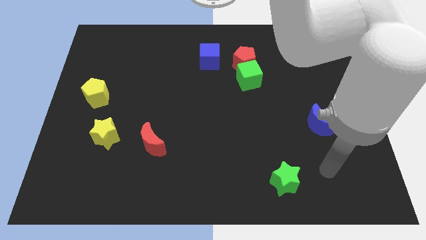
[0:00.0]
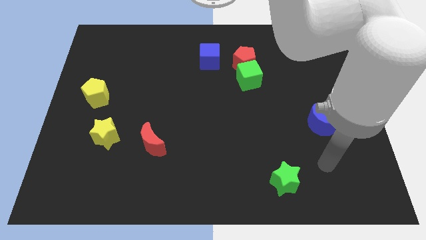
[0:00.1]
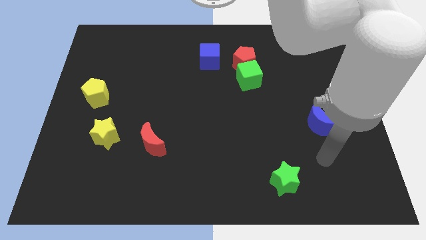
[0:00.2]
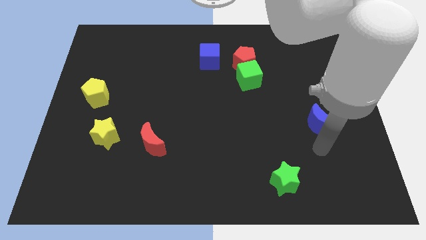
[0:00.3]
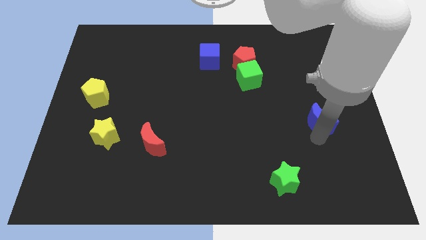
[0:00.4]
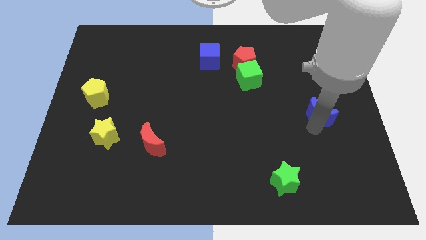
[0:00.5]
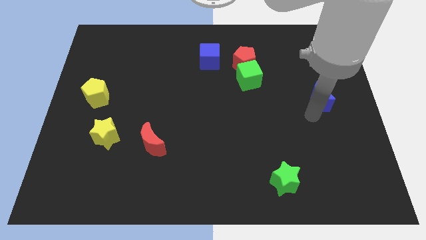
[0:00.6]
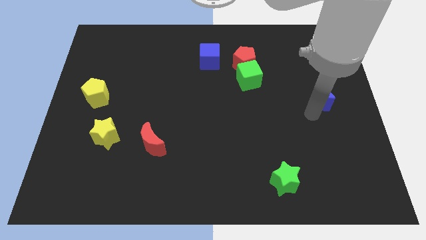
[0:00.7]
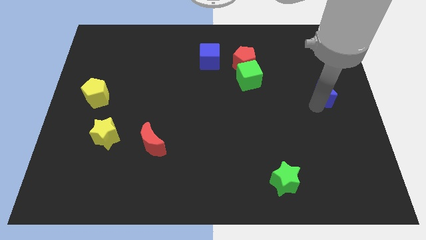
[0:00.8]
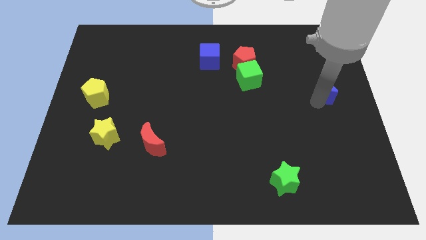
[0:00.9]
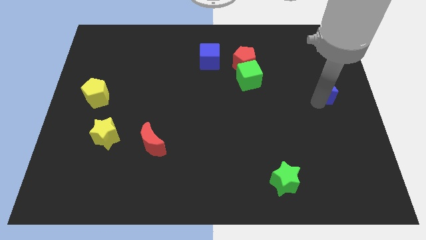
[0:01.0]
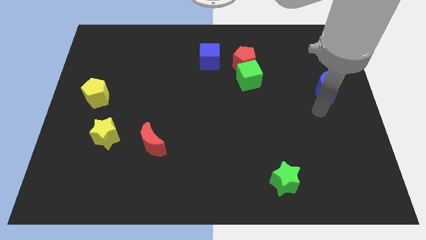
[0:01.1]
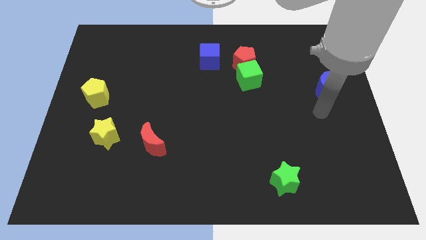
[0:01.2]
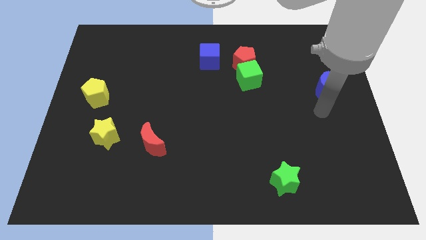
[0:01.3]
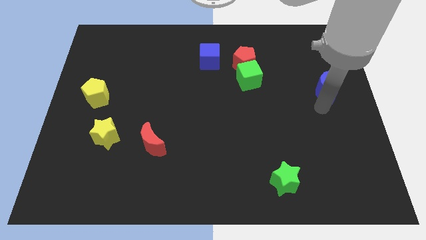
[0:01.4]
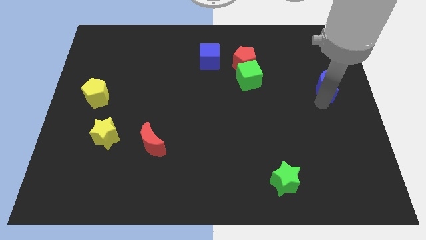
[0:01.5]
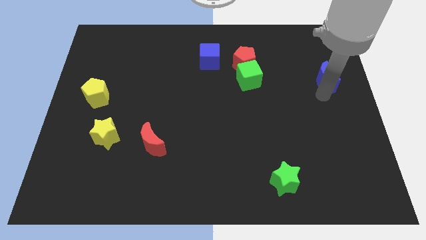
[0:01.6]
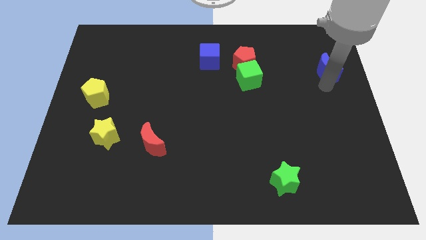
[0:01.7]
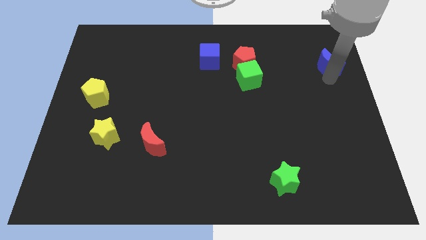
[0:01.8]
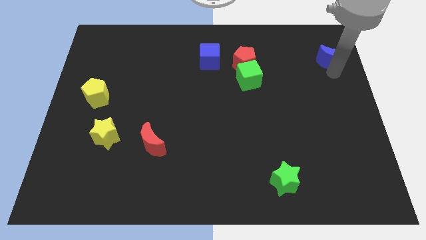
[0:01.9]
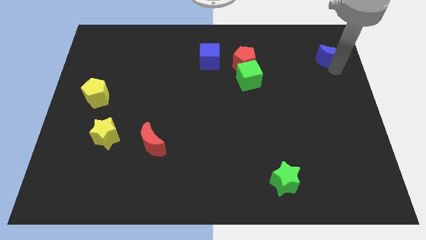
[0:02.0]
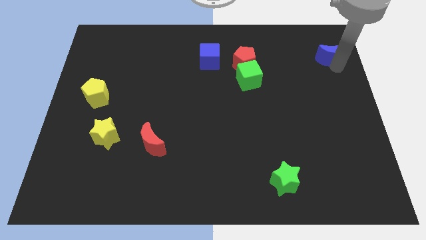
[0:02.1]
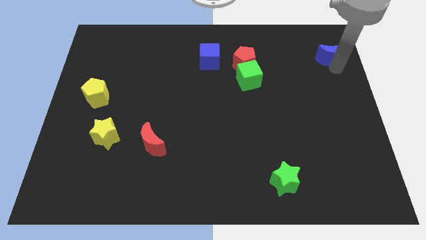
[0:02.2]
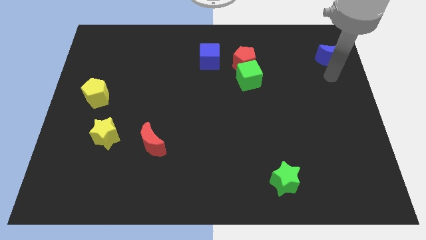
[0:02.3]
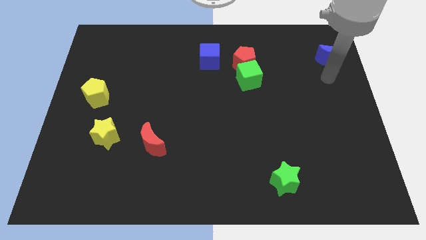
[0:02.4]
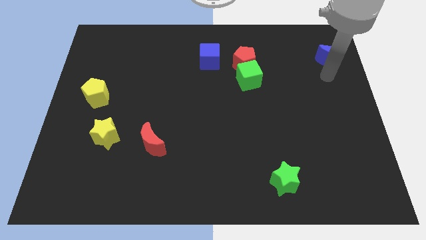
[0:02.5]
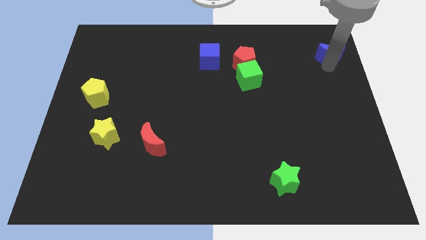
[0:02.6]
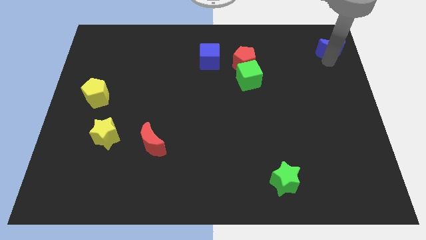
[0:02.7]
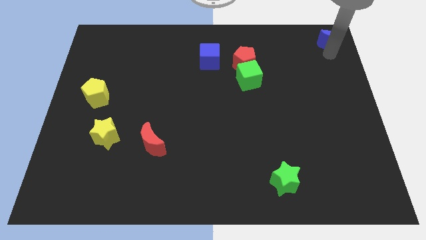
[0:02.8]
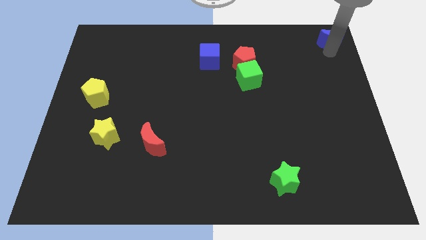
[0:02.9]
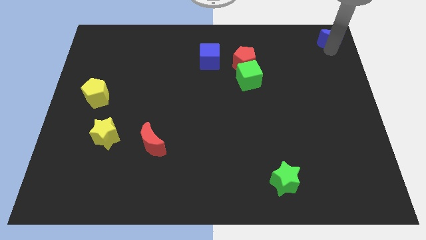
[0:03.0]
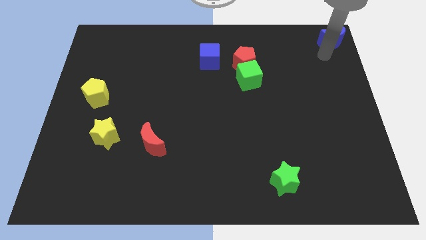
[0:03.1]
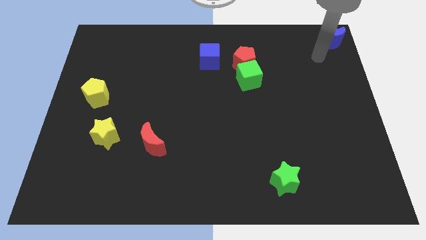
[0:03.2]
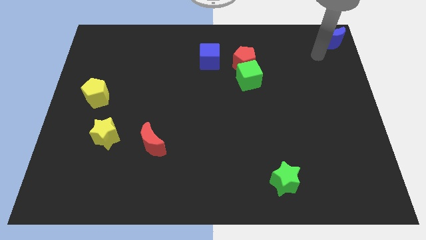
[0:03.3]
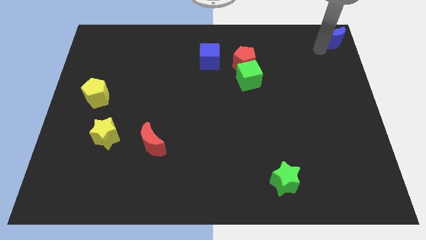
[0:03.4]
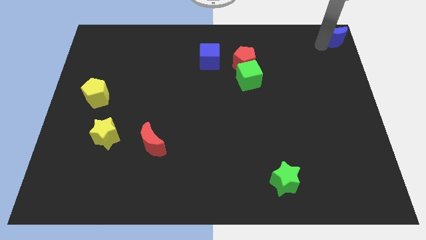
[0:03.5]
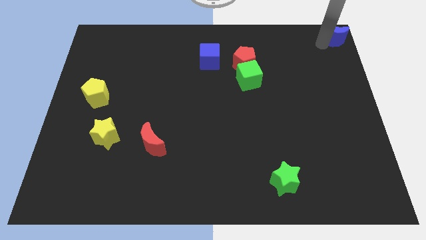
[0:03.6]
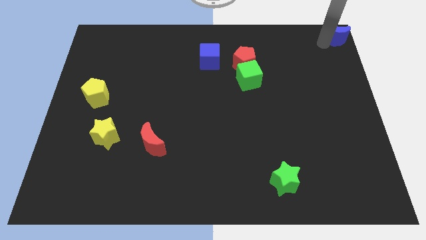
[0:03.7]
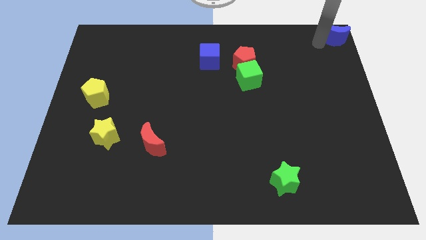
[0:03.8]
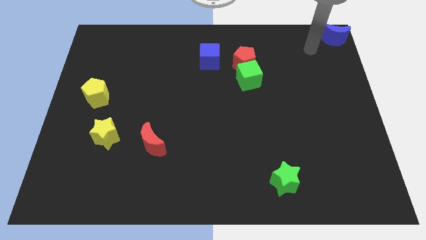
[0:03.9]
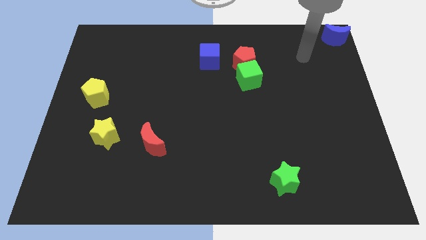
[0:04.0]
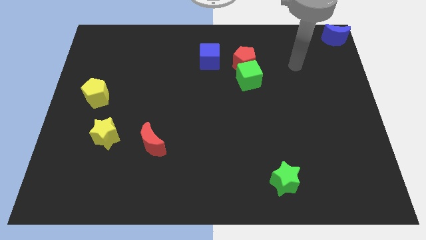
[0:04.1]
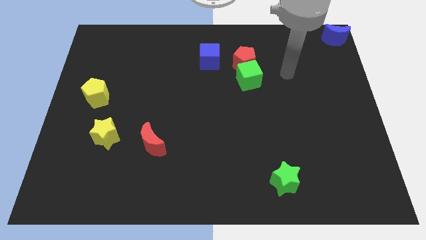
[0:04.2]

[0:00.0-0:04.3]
place the blue crescent at the top right corner of the board

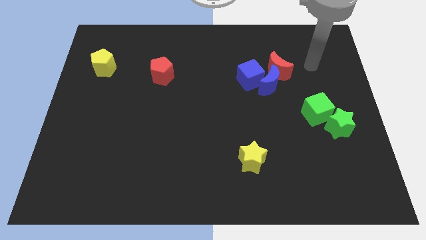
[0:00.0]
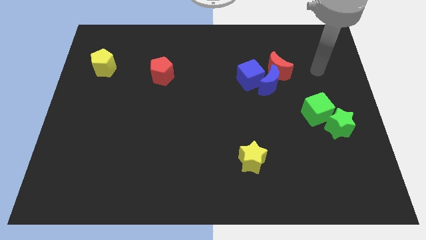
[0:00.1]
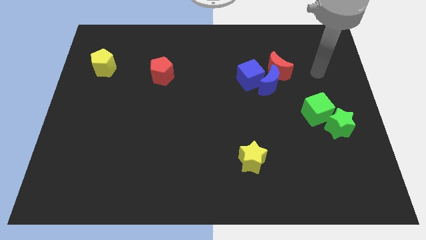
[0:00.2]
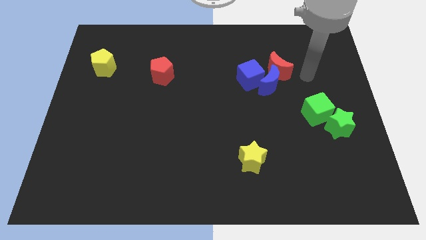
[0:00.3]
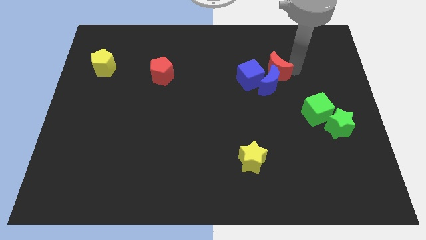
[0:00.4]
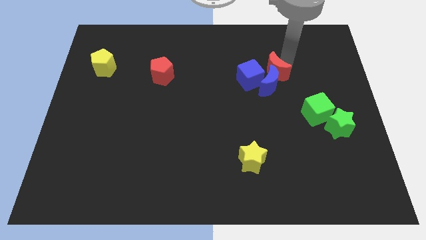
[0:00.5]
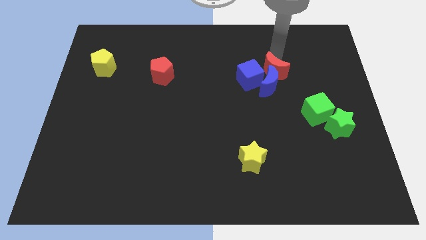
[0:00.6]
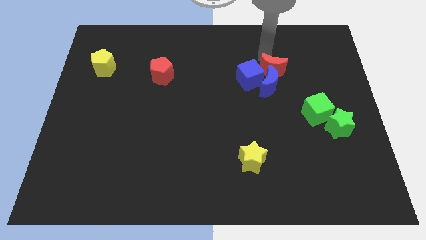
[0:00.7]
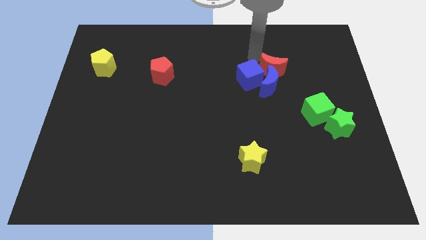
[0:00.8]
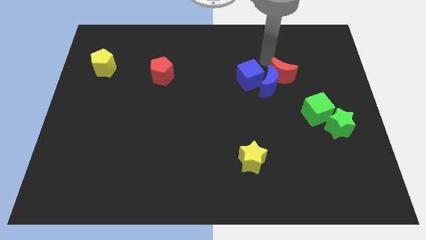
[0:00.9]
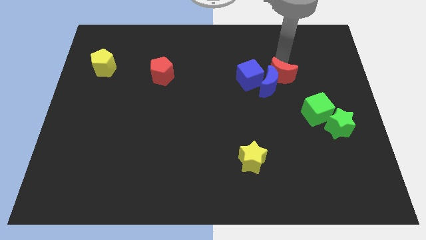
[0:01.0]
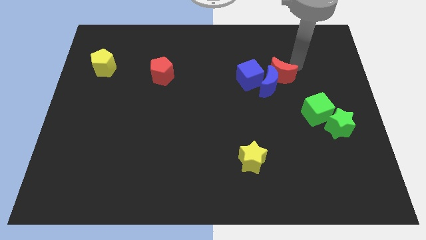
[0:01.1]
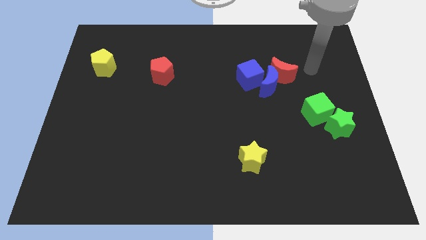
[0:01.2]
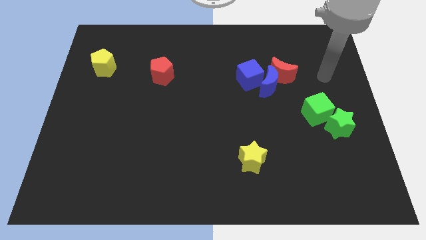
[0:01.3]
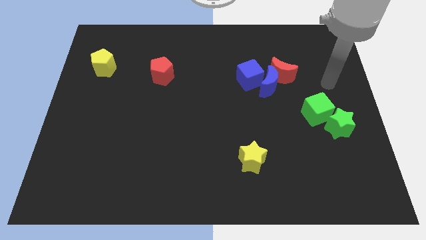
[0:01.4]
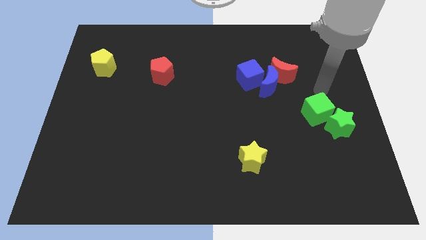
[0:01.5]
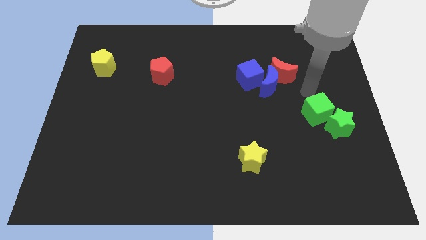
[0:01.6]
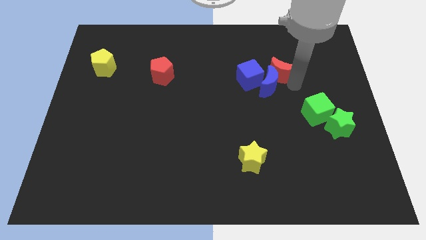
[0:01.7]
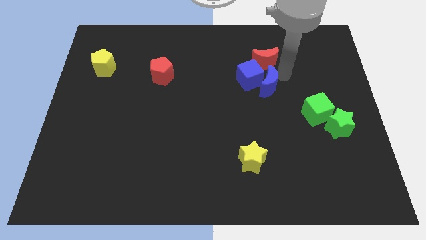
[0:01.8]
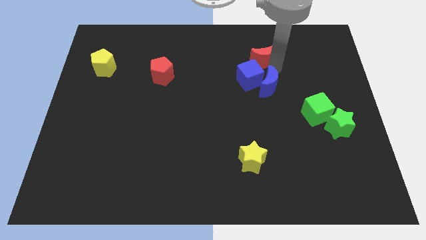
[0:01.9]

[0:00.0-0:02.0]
move the red crescent slightly to the left

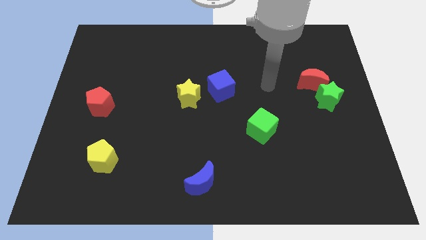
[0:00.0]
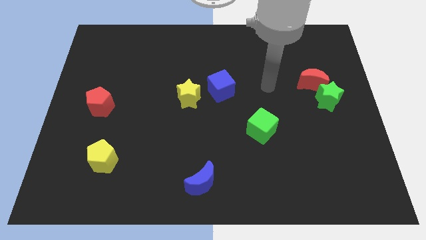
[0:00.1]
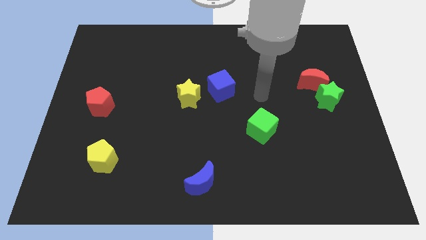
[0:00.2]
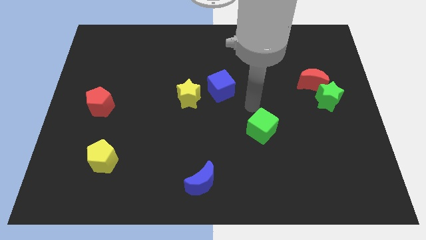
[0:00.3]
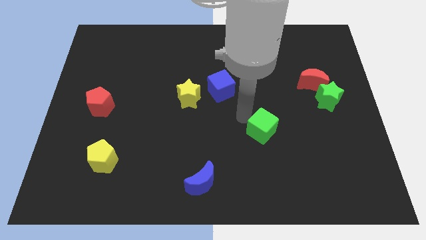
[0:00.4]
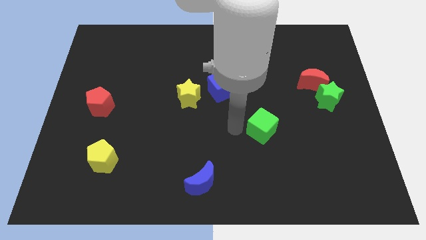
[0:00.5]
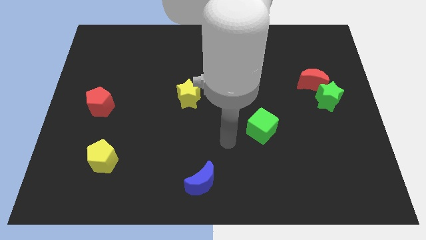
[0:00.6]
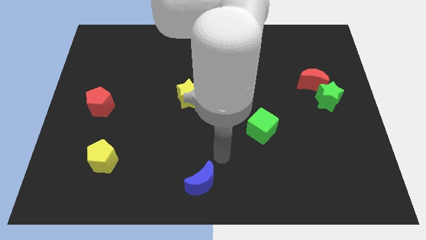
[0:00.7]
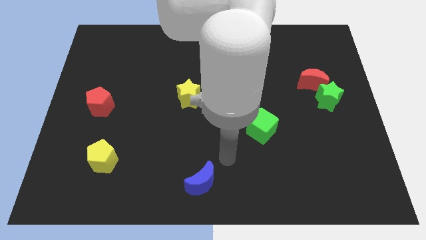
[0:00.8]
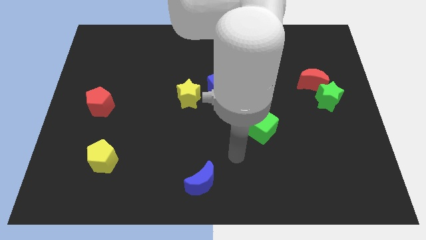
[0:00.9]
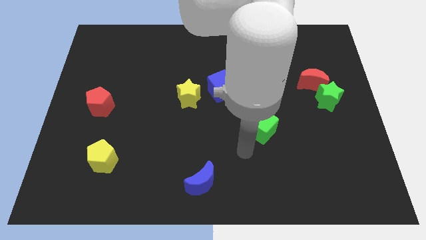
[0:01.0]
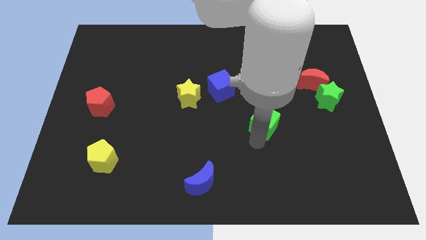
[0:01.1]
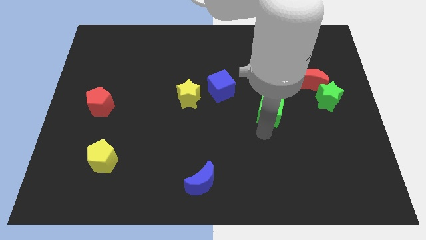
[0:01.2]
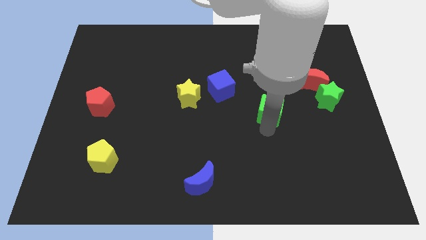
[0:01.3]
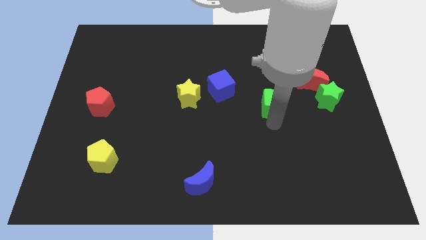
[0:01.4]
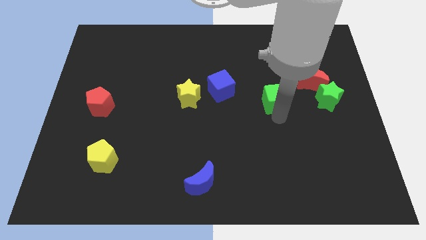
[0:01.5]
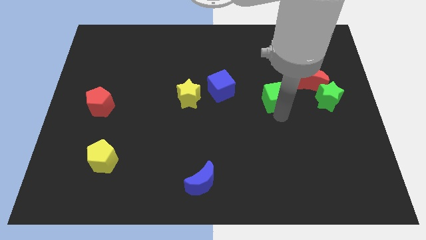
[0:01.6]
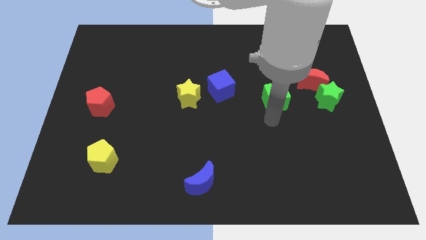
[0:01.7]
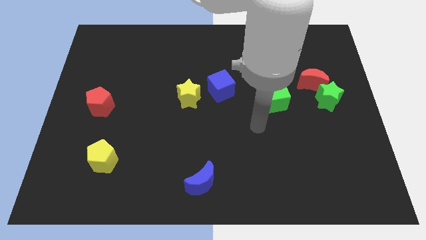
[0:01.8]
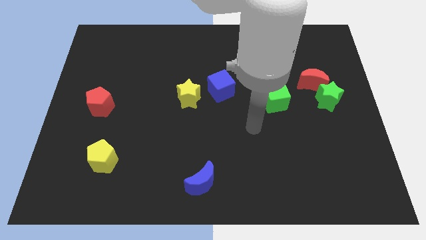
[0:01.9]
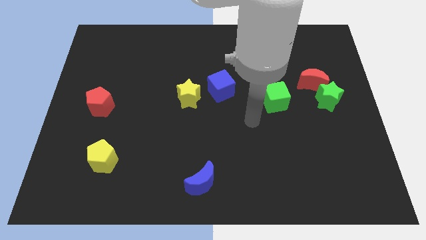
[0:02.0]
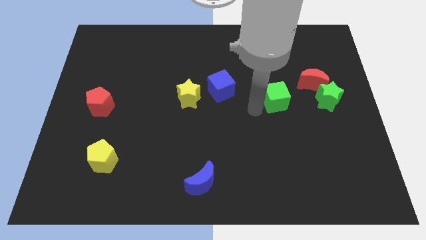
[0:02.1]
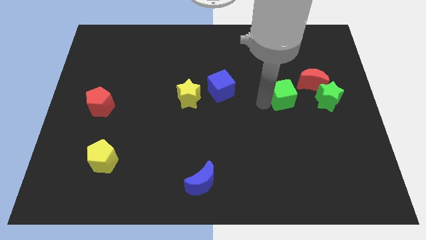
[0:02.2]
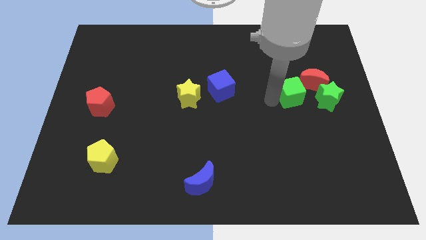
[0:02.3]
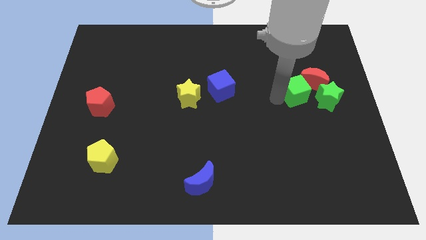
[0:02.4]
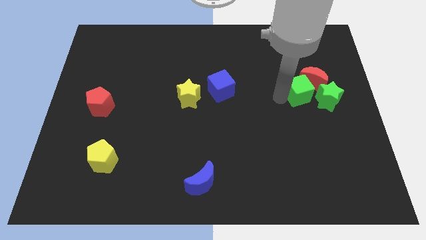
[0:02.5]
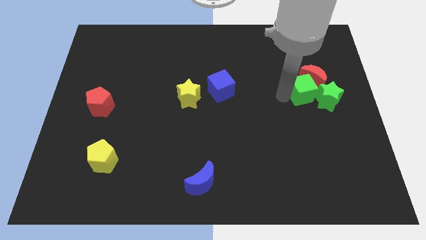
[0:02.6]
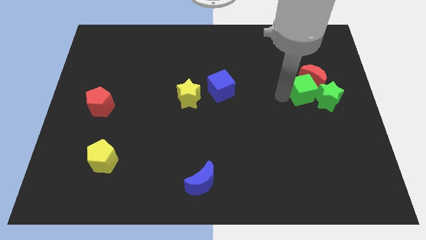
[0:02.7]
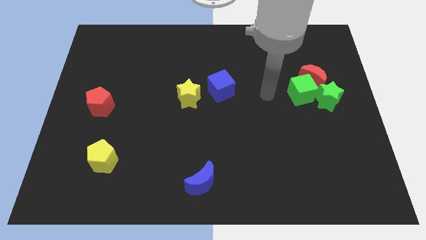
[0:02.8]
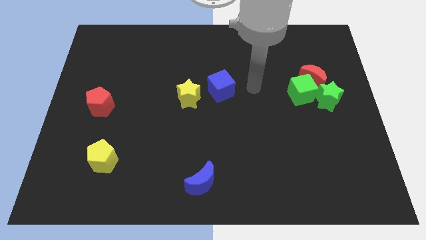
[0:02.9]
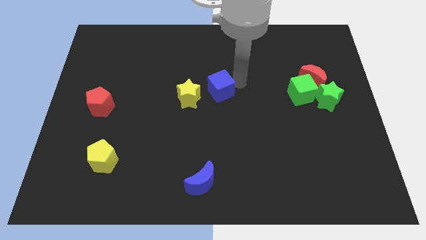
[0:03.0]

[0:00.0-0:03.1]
push the green cube close to the left side of the green star
